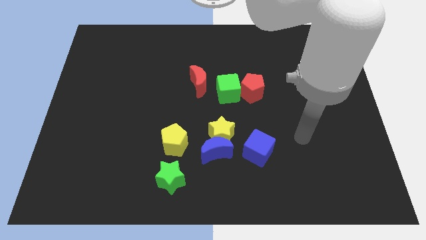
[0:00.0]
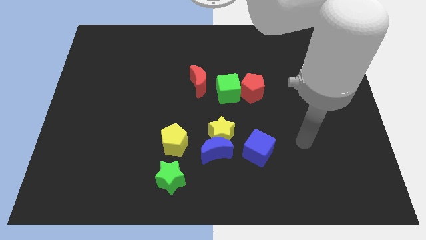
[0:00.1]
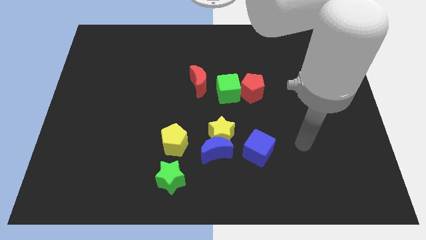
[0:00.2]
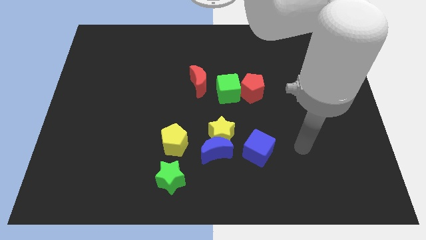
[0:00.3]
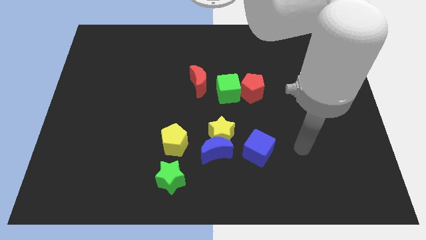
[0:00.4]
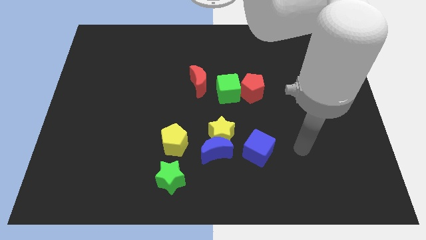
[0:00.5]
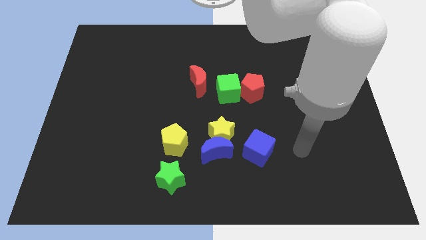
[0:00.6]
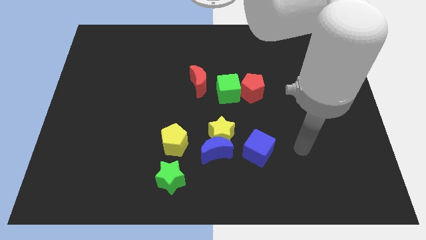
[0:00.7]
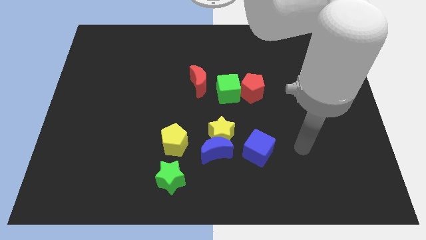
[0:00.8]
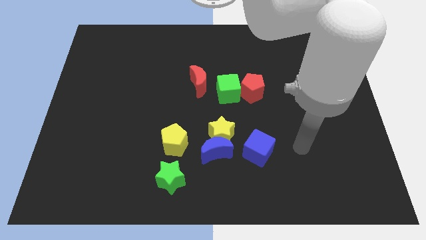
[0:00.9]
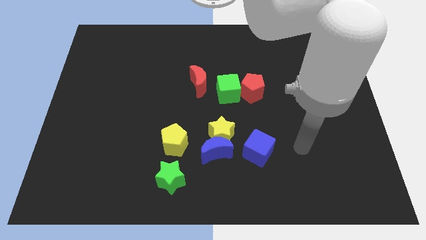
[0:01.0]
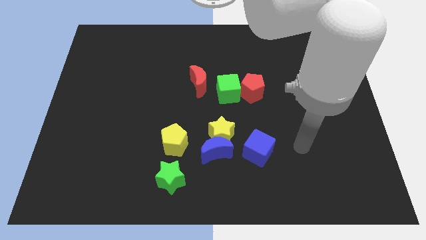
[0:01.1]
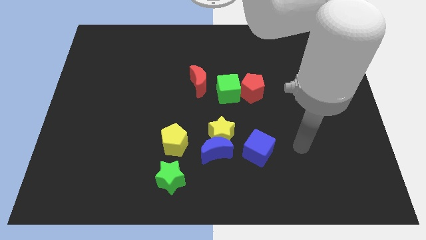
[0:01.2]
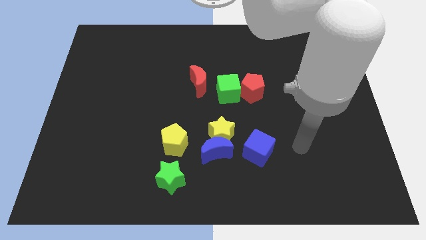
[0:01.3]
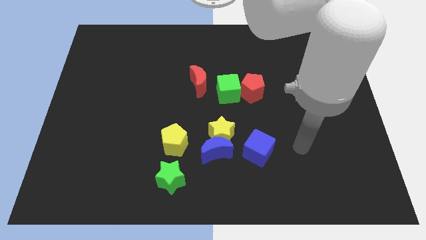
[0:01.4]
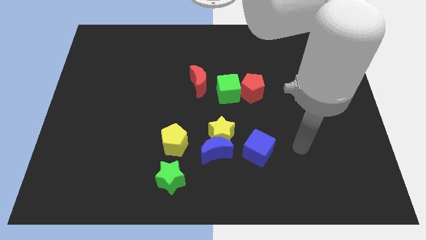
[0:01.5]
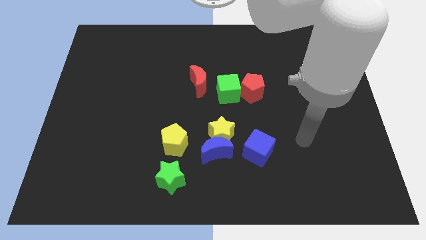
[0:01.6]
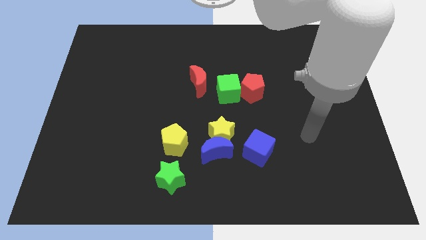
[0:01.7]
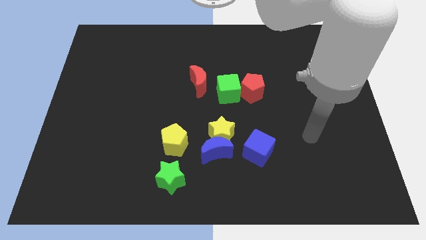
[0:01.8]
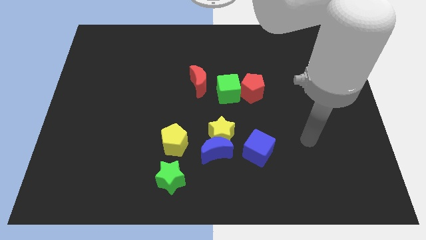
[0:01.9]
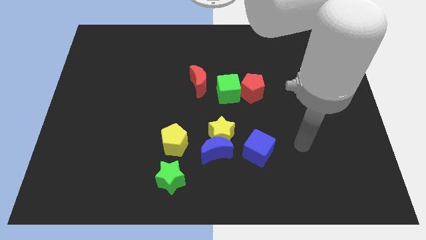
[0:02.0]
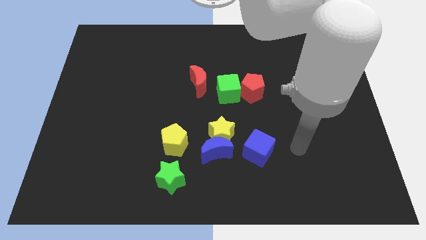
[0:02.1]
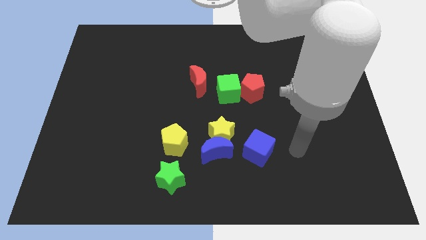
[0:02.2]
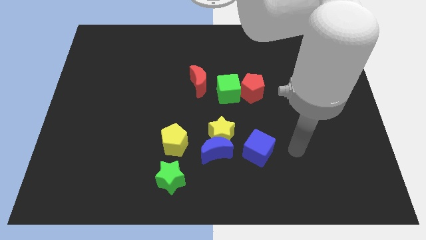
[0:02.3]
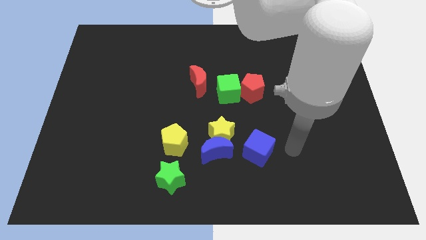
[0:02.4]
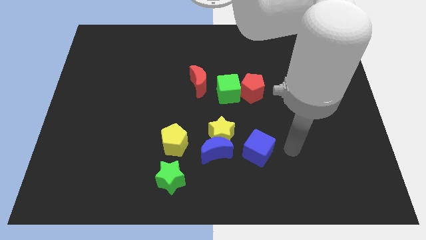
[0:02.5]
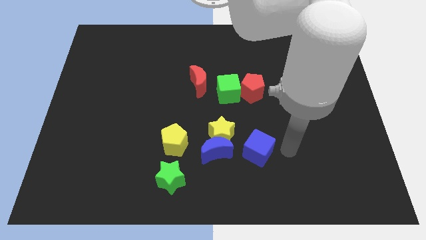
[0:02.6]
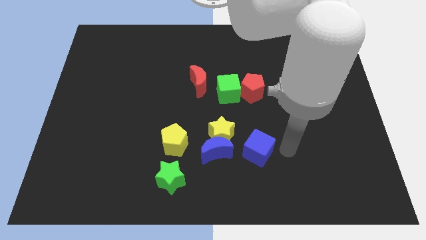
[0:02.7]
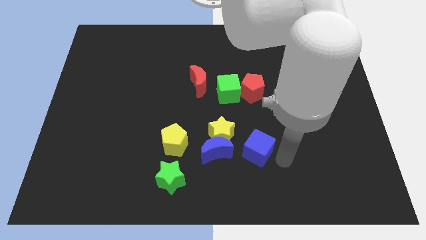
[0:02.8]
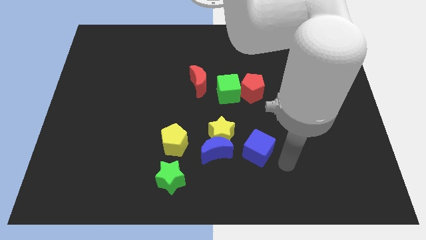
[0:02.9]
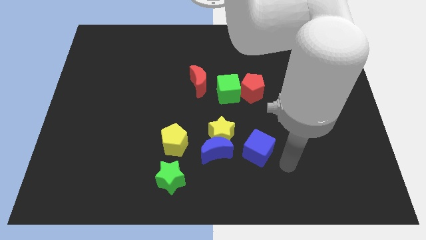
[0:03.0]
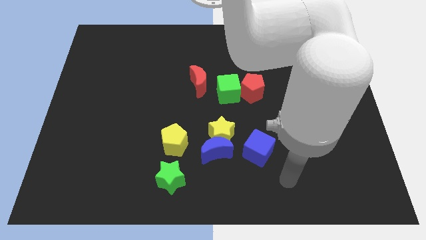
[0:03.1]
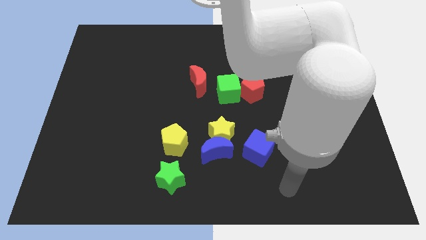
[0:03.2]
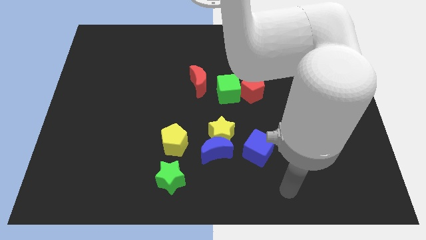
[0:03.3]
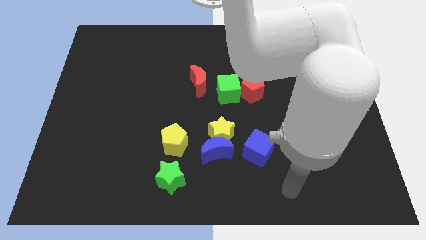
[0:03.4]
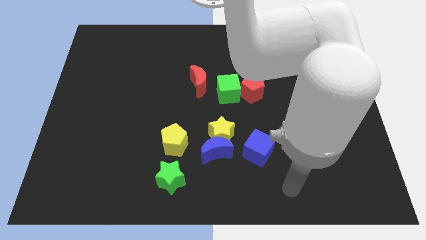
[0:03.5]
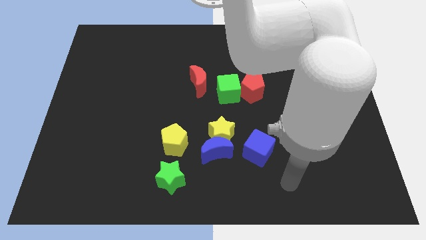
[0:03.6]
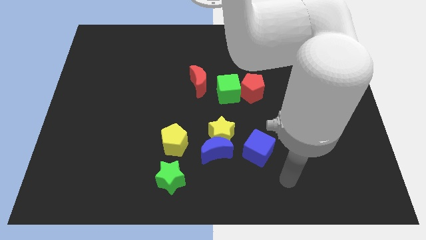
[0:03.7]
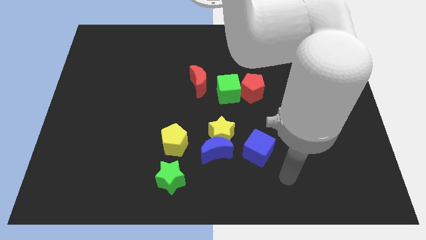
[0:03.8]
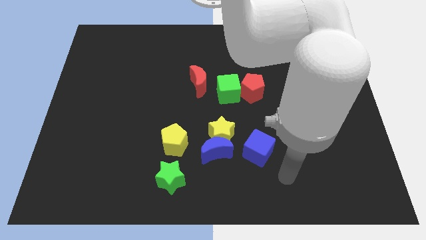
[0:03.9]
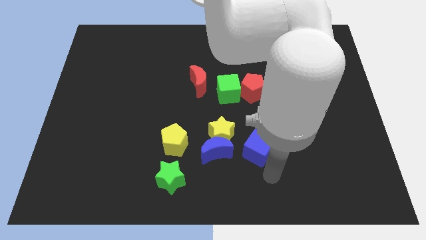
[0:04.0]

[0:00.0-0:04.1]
touch the blue cube slightly

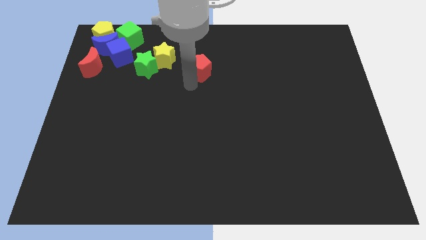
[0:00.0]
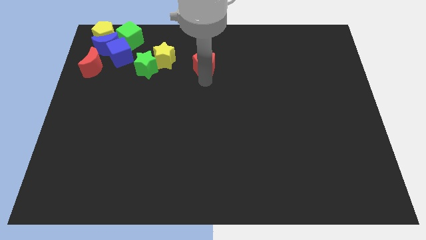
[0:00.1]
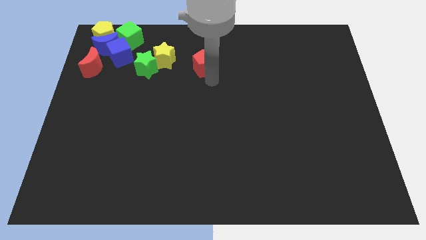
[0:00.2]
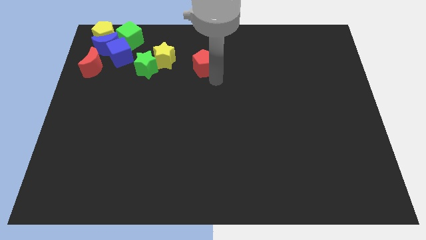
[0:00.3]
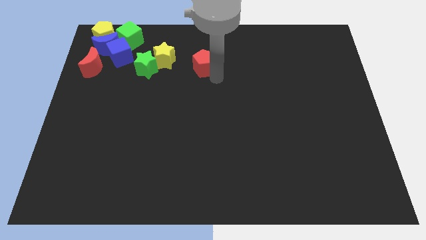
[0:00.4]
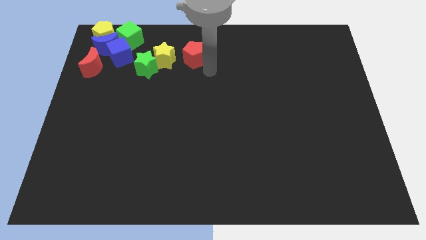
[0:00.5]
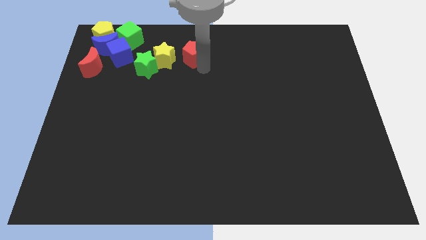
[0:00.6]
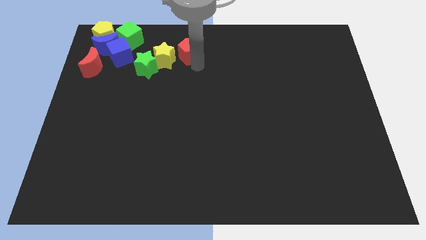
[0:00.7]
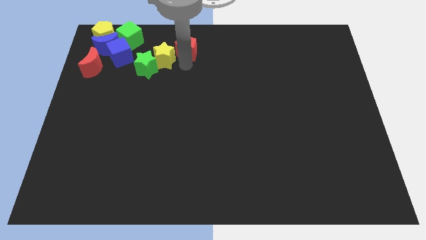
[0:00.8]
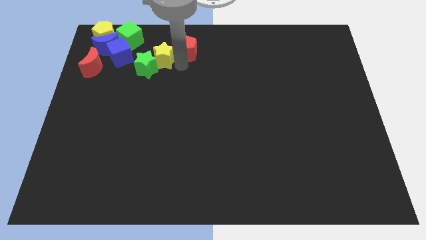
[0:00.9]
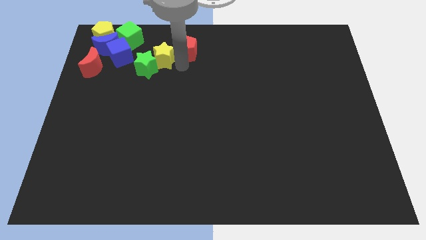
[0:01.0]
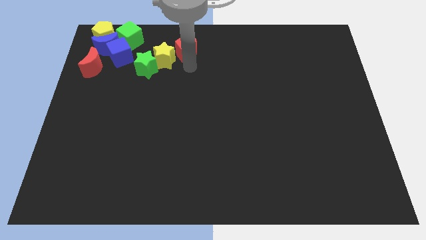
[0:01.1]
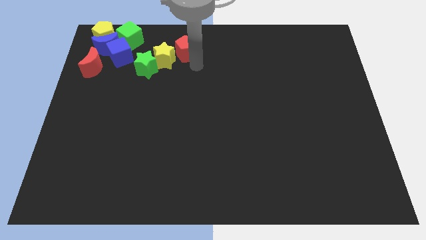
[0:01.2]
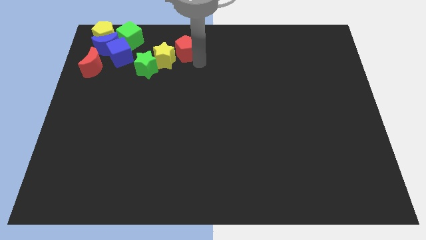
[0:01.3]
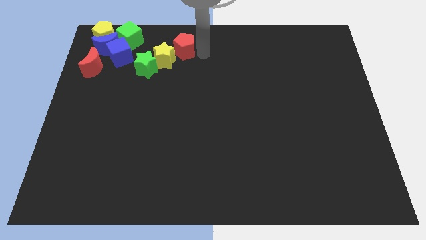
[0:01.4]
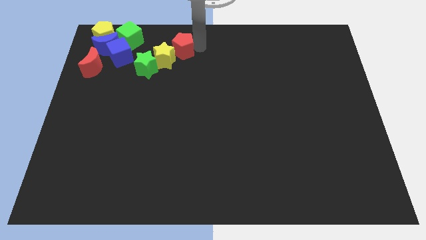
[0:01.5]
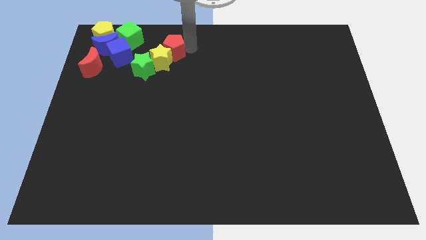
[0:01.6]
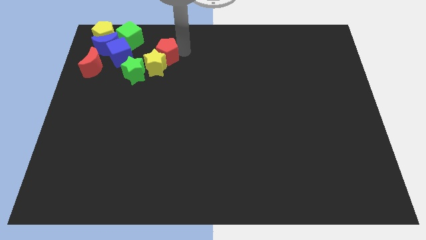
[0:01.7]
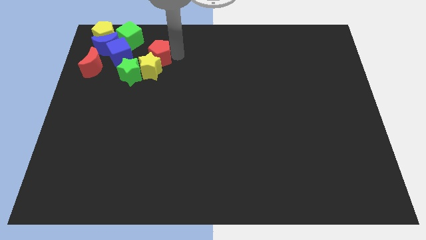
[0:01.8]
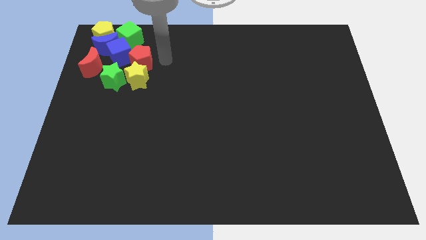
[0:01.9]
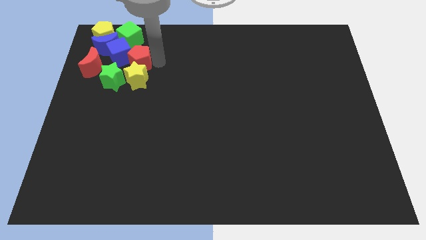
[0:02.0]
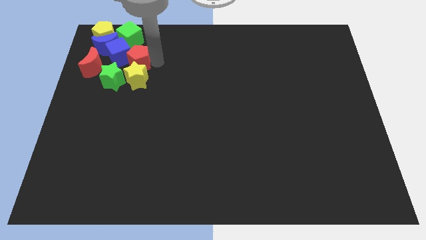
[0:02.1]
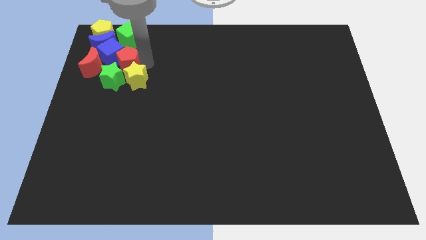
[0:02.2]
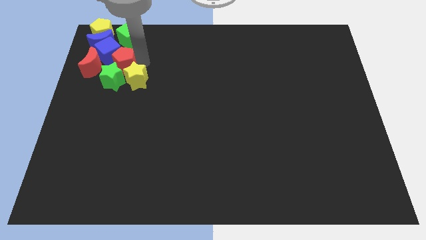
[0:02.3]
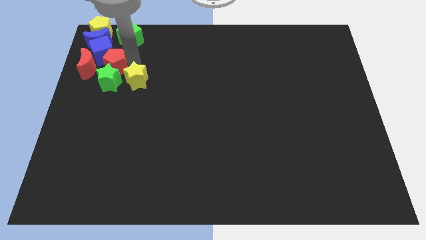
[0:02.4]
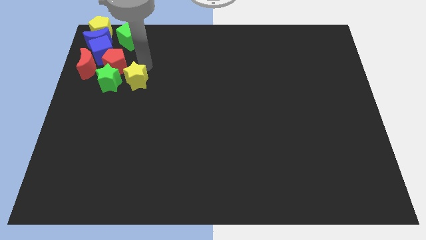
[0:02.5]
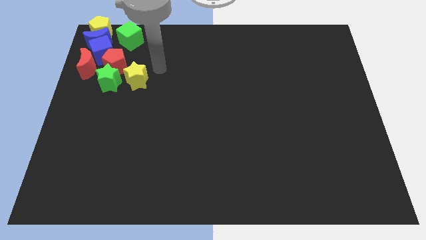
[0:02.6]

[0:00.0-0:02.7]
push the red pentagon to the top of the green star

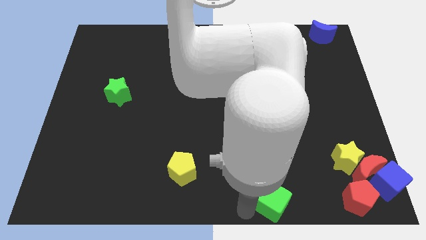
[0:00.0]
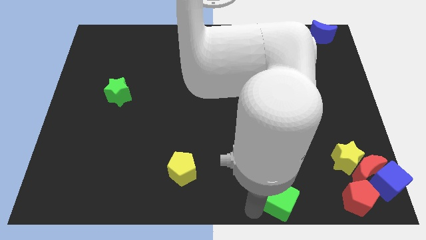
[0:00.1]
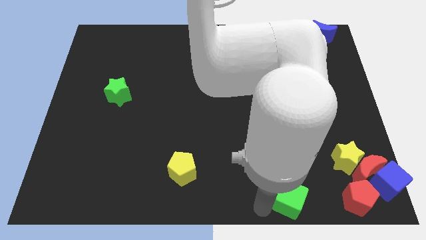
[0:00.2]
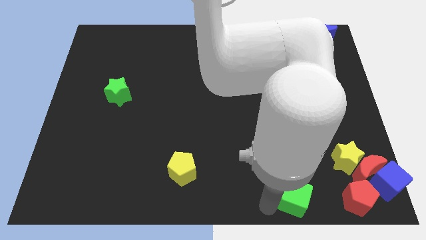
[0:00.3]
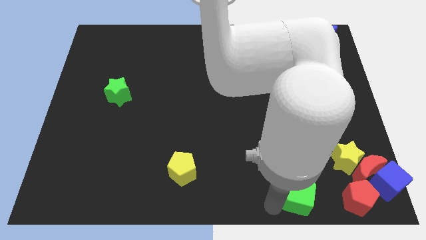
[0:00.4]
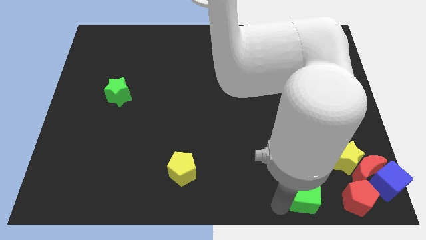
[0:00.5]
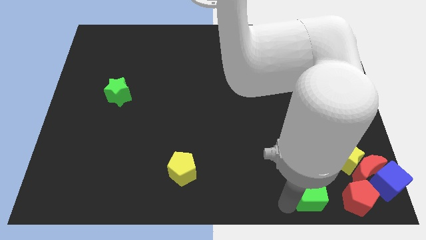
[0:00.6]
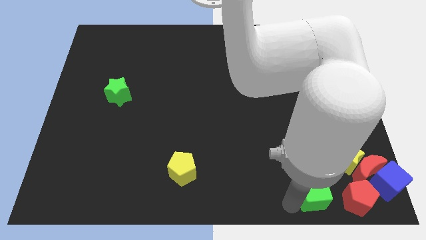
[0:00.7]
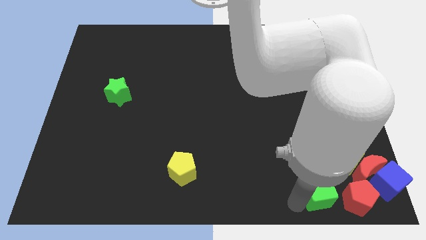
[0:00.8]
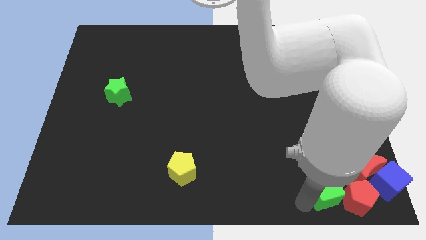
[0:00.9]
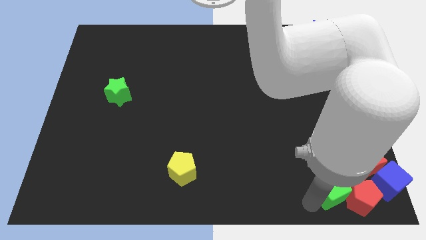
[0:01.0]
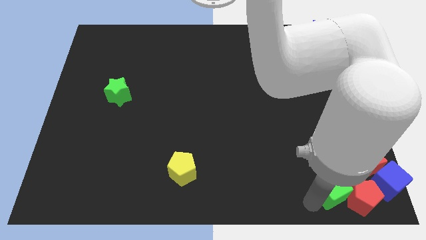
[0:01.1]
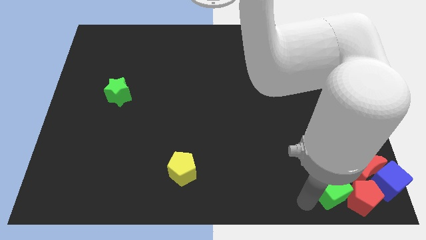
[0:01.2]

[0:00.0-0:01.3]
slide the green cube into the red pentagon

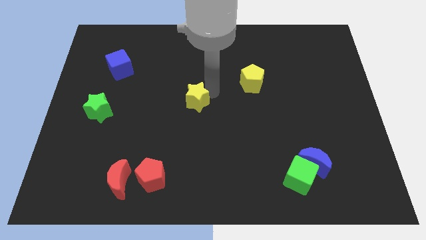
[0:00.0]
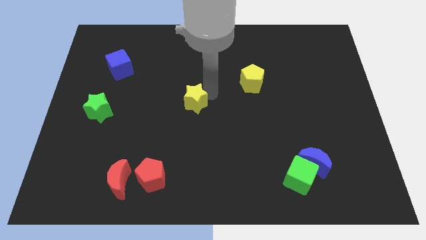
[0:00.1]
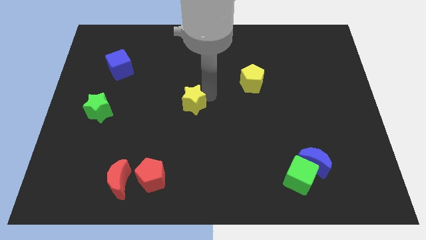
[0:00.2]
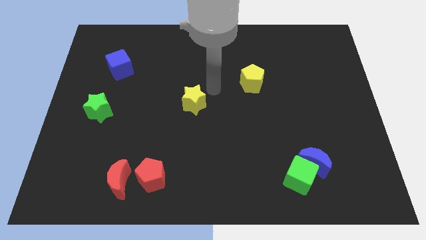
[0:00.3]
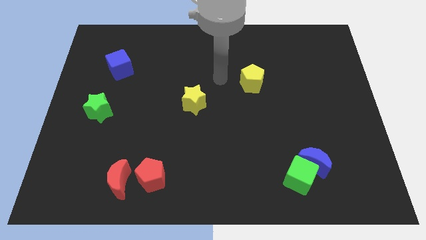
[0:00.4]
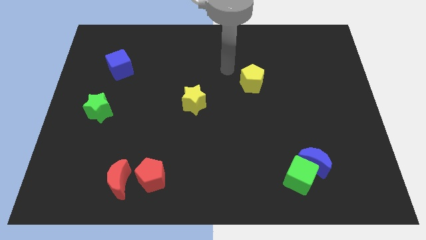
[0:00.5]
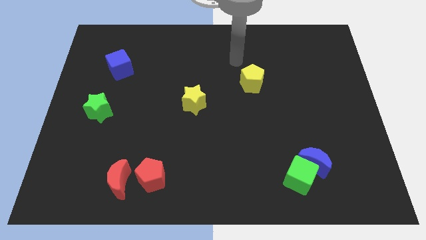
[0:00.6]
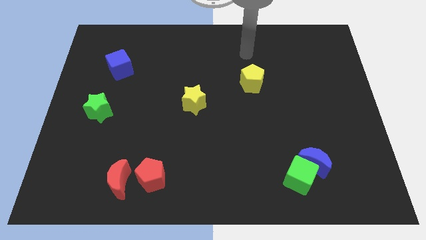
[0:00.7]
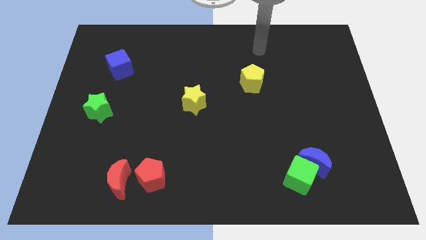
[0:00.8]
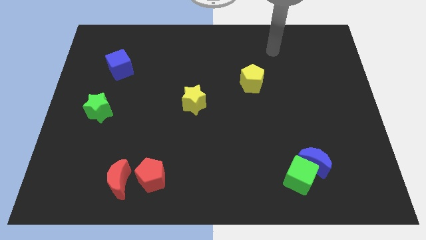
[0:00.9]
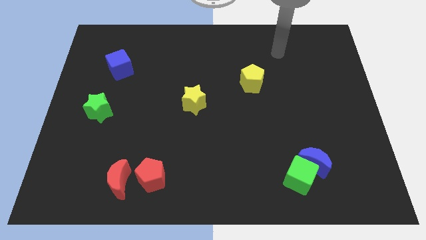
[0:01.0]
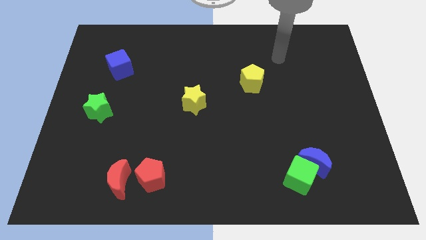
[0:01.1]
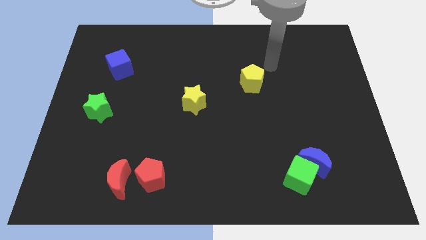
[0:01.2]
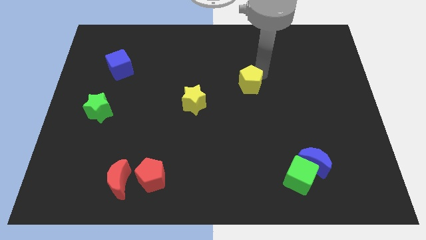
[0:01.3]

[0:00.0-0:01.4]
push the yellow star to the center of the board
